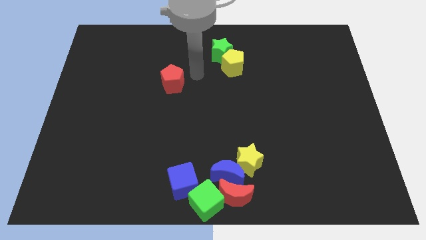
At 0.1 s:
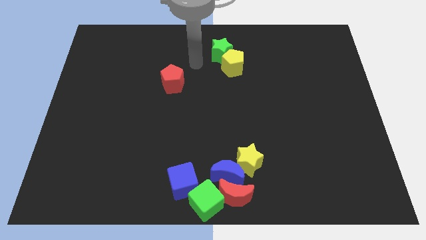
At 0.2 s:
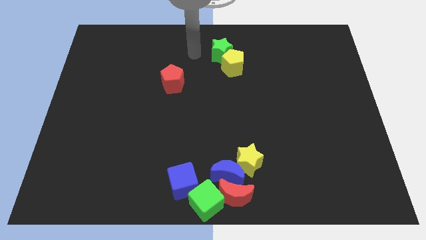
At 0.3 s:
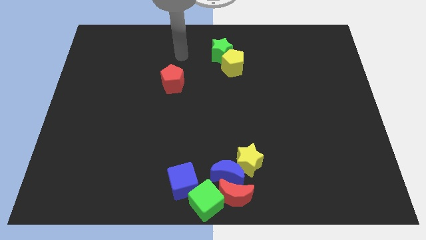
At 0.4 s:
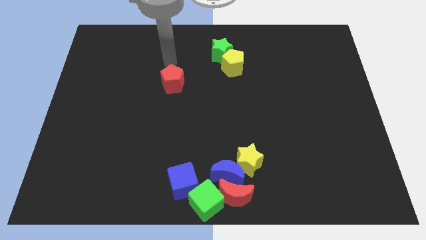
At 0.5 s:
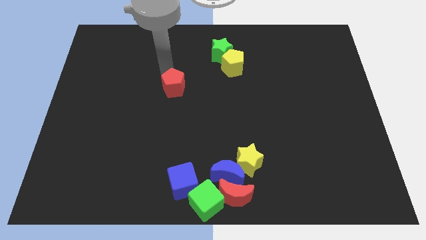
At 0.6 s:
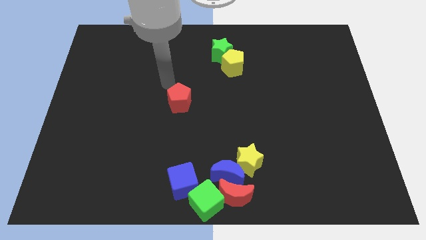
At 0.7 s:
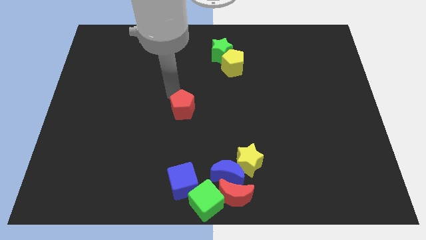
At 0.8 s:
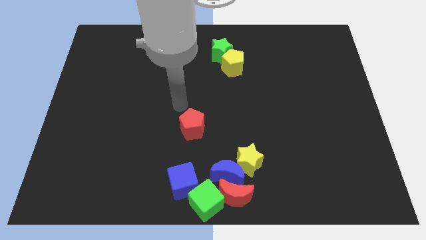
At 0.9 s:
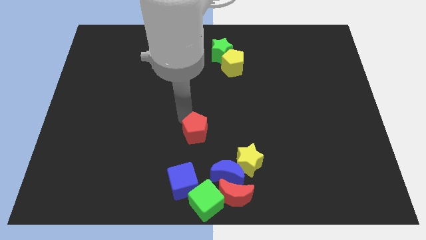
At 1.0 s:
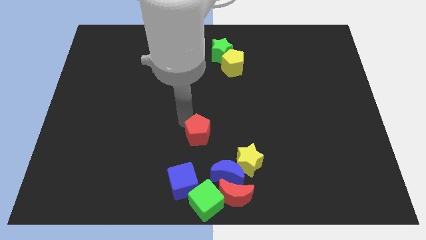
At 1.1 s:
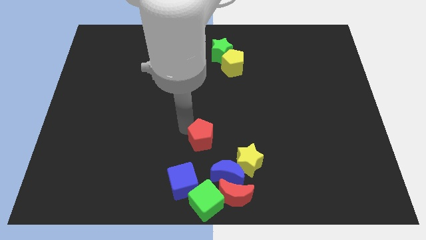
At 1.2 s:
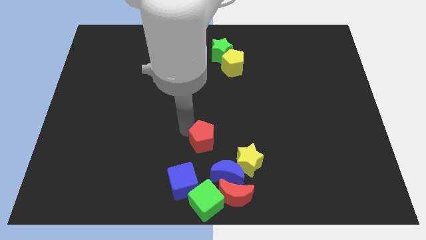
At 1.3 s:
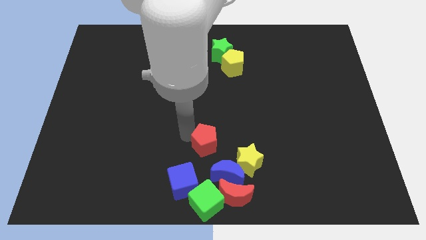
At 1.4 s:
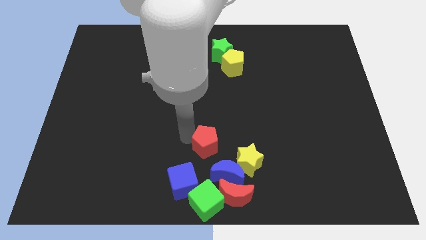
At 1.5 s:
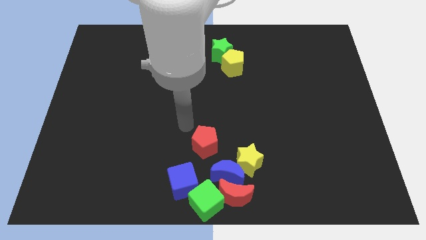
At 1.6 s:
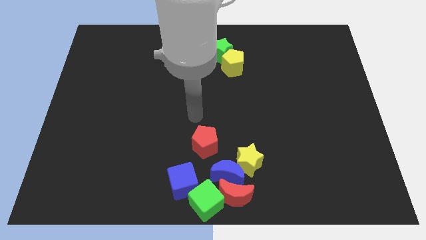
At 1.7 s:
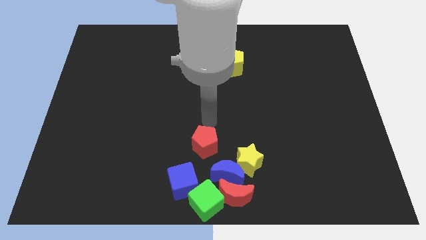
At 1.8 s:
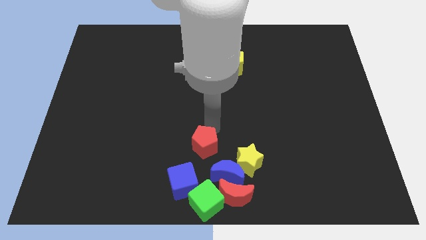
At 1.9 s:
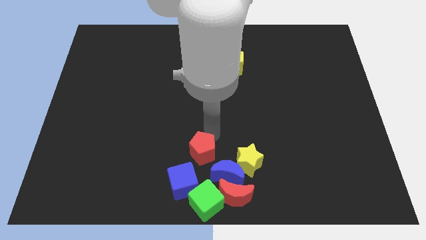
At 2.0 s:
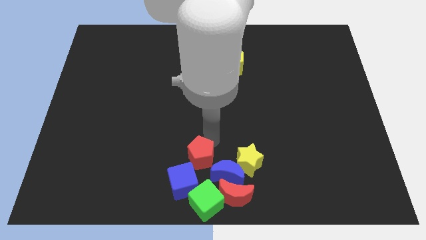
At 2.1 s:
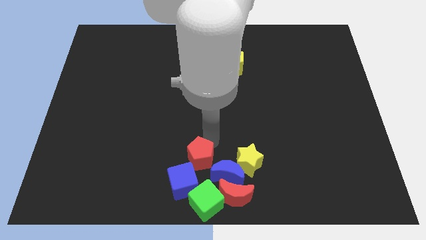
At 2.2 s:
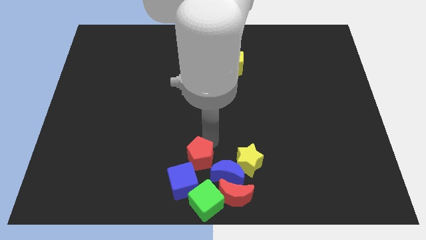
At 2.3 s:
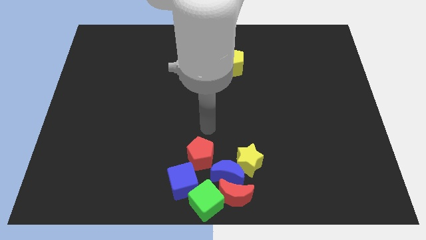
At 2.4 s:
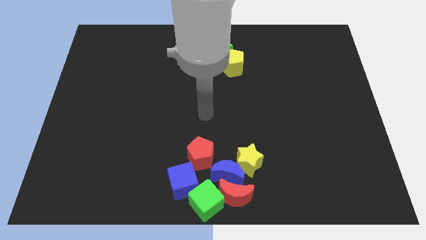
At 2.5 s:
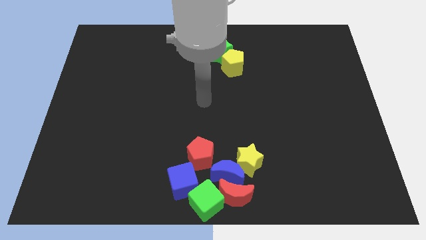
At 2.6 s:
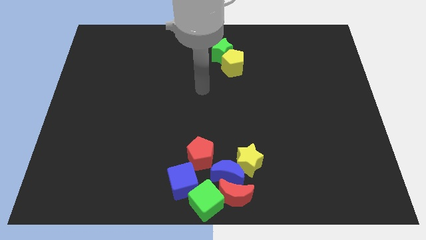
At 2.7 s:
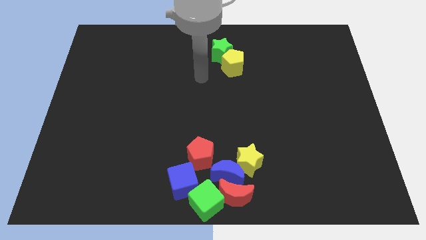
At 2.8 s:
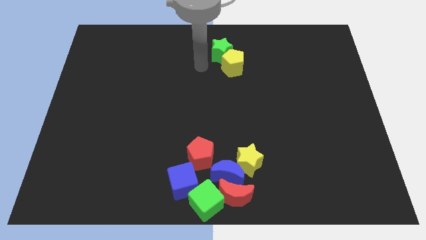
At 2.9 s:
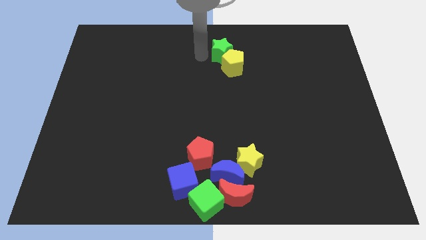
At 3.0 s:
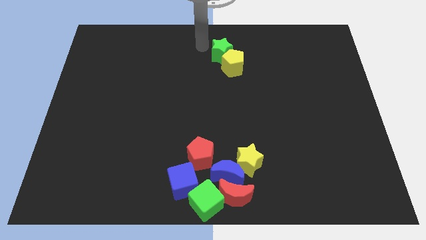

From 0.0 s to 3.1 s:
move the red pentagon at the top right side of blue cube

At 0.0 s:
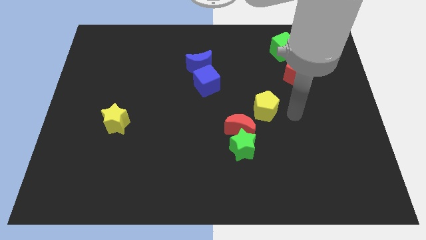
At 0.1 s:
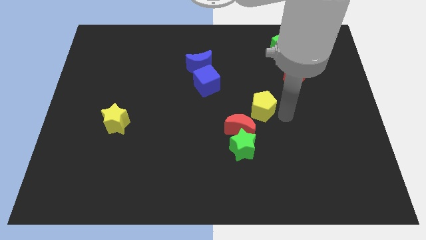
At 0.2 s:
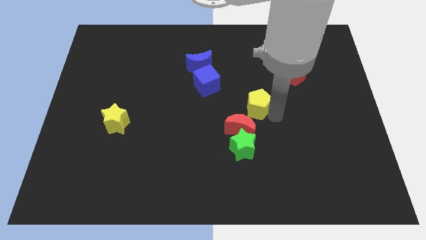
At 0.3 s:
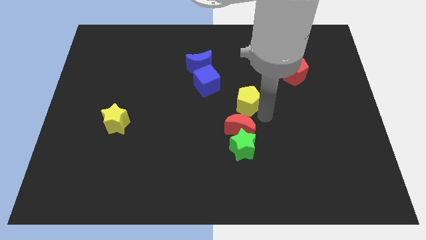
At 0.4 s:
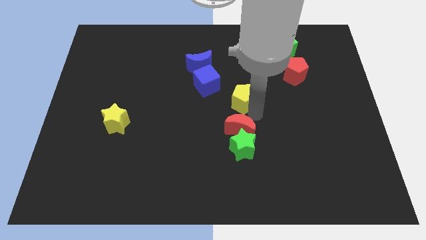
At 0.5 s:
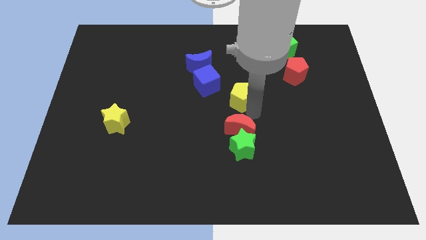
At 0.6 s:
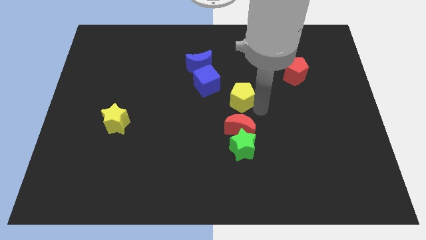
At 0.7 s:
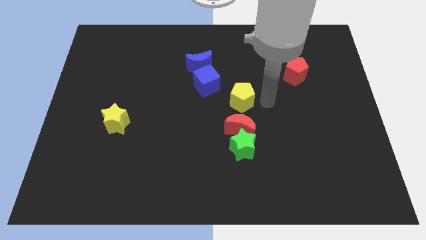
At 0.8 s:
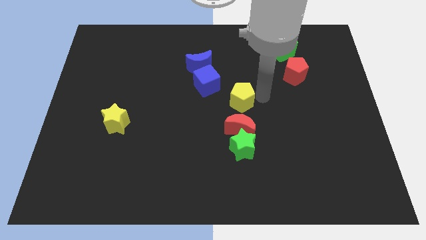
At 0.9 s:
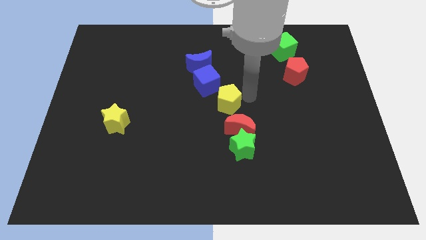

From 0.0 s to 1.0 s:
drag the yellow pentagon diagonally bottom right to blue cube

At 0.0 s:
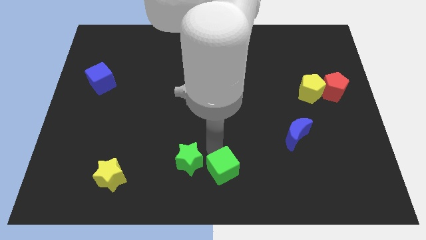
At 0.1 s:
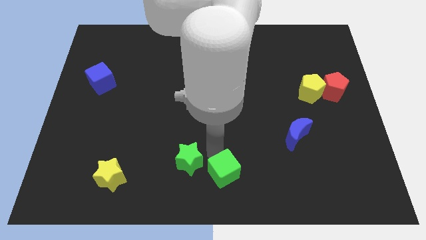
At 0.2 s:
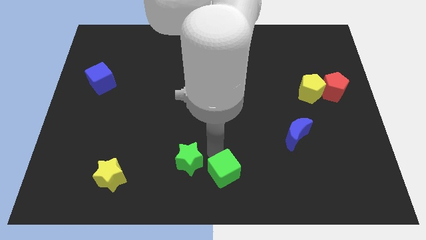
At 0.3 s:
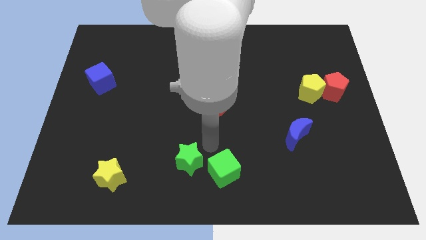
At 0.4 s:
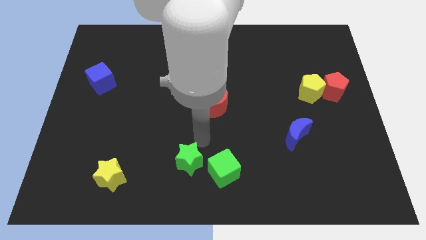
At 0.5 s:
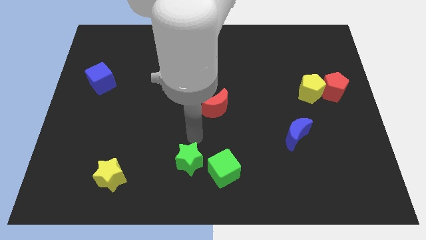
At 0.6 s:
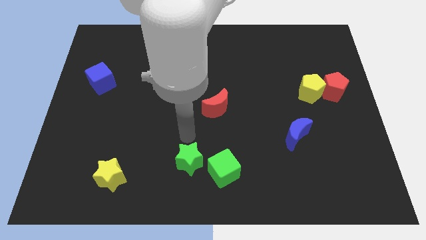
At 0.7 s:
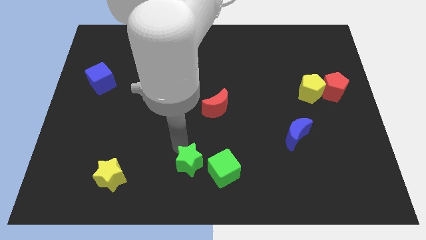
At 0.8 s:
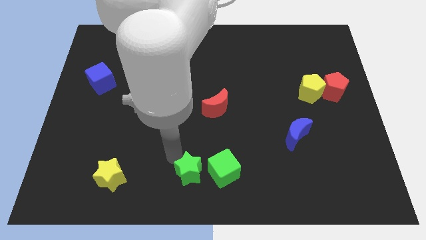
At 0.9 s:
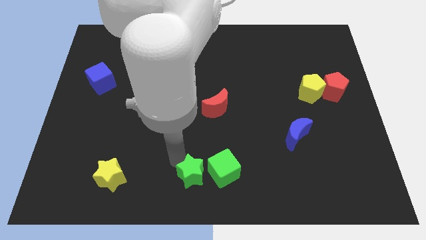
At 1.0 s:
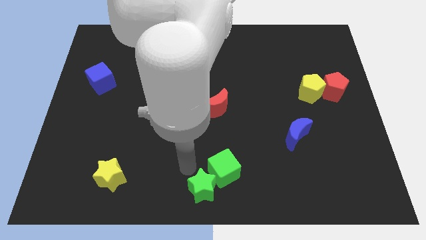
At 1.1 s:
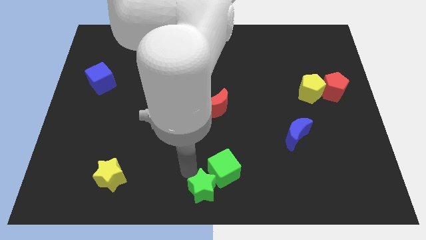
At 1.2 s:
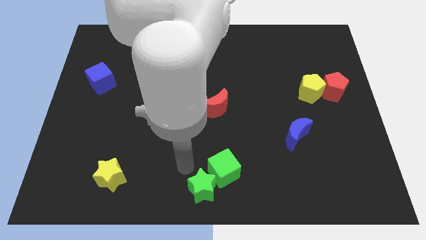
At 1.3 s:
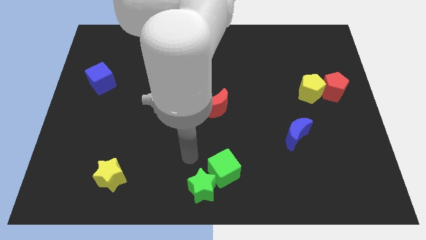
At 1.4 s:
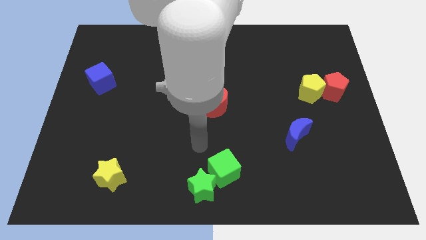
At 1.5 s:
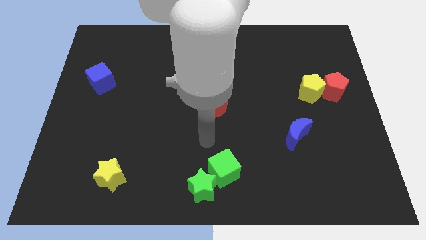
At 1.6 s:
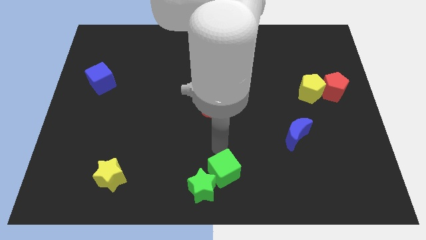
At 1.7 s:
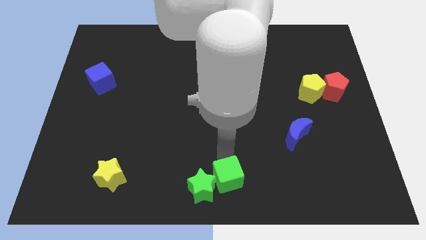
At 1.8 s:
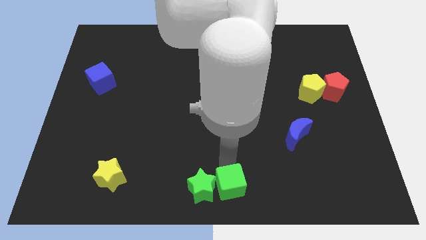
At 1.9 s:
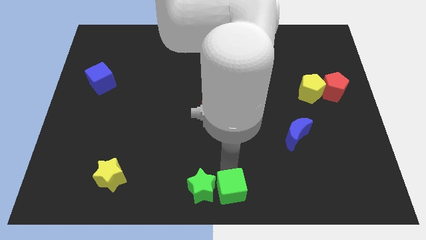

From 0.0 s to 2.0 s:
adjust the green blocks at the bottom center of the board

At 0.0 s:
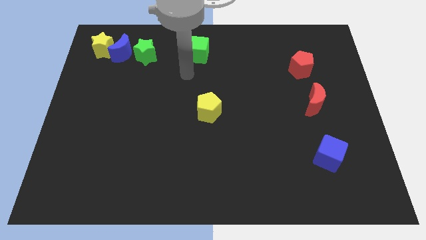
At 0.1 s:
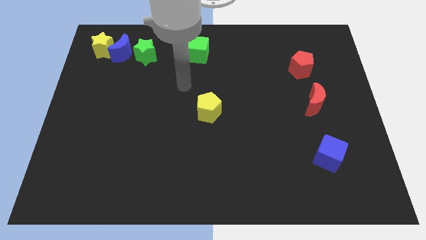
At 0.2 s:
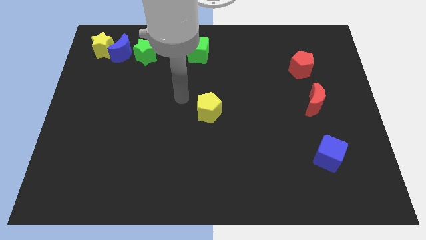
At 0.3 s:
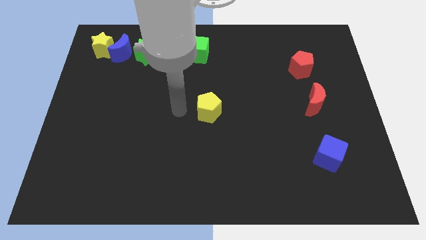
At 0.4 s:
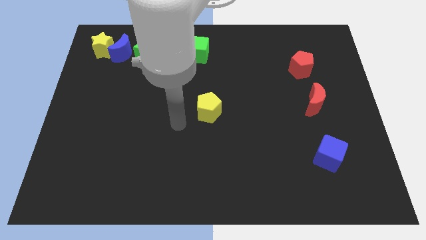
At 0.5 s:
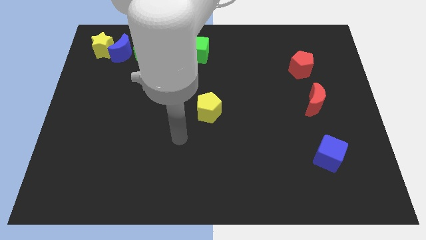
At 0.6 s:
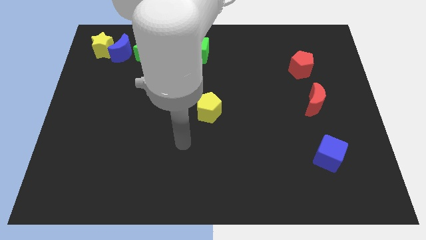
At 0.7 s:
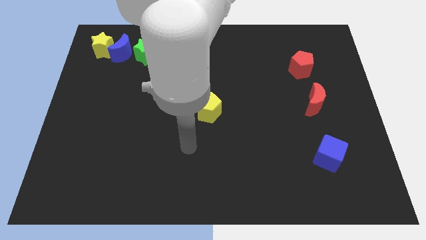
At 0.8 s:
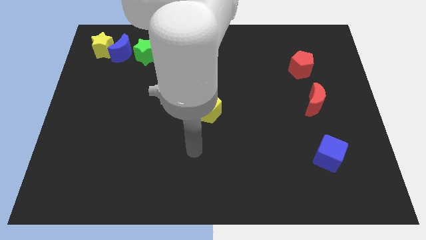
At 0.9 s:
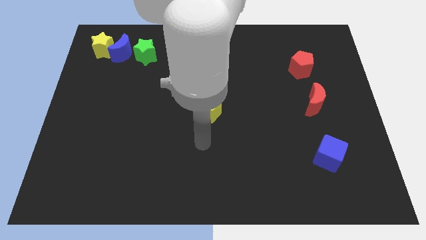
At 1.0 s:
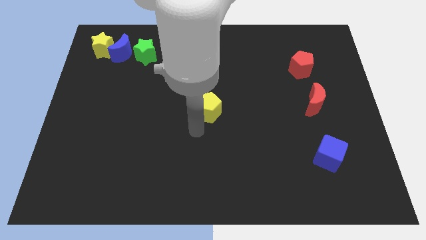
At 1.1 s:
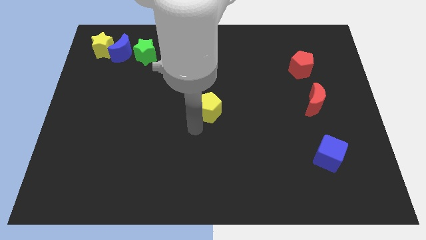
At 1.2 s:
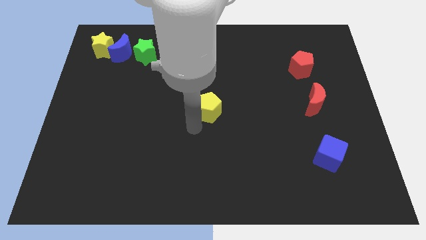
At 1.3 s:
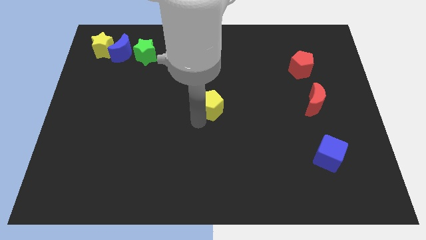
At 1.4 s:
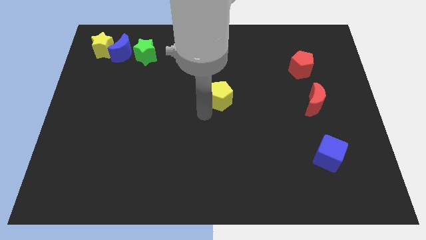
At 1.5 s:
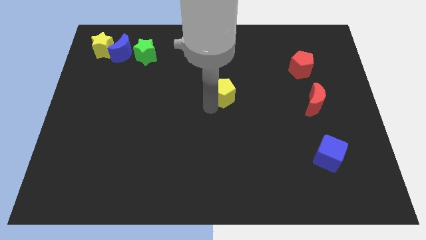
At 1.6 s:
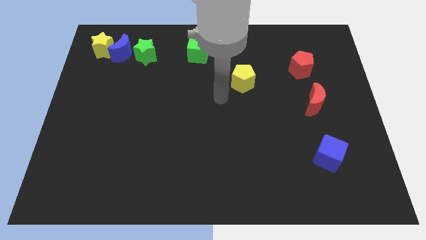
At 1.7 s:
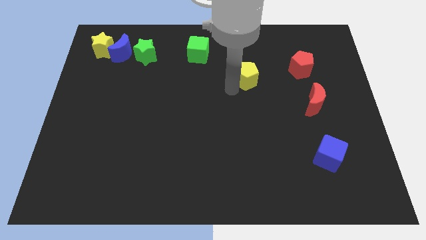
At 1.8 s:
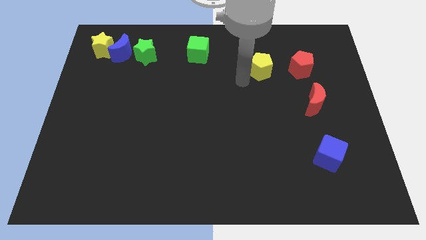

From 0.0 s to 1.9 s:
move the yellow pentagon to the left of the red pentagon

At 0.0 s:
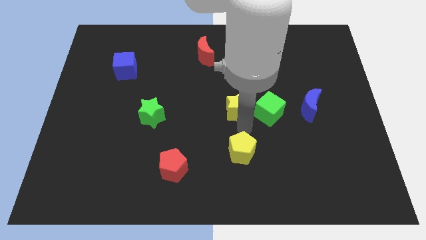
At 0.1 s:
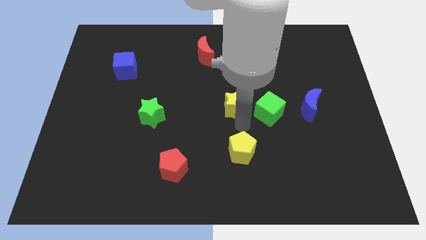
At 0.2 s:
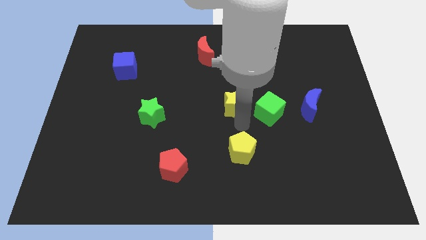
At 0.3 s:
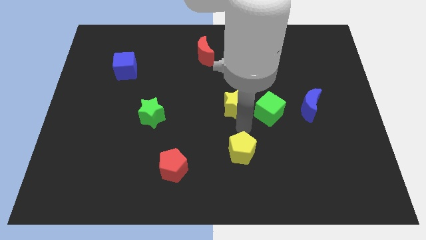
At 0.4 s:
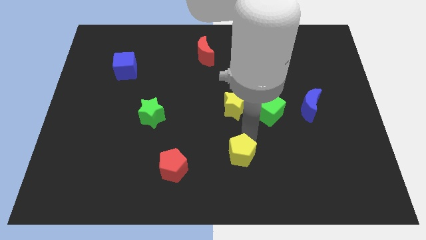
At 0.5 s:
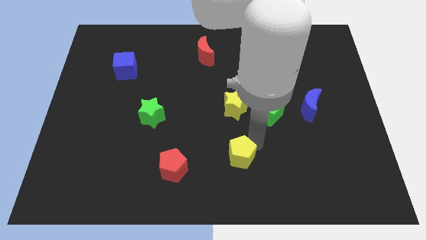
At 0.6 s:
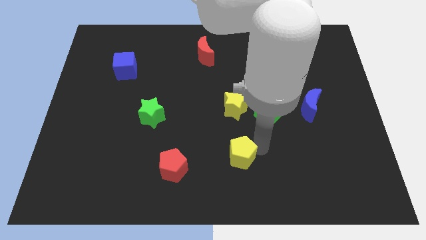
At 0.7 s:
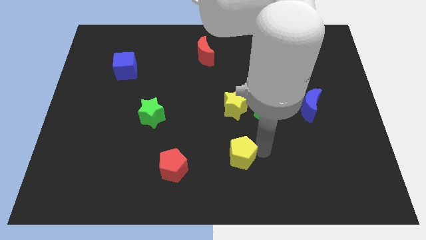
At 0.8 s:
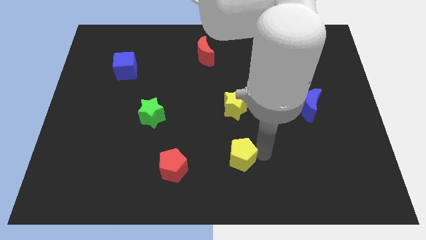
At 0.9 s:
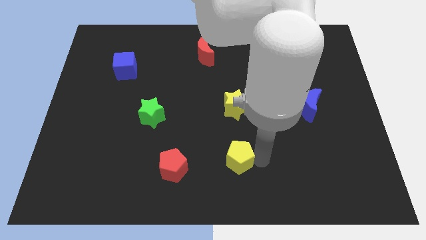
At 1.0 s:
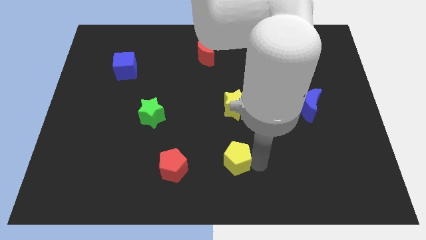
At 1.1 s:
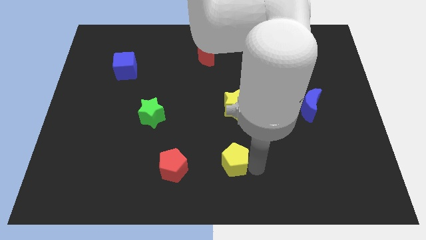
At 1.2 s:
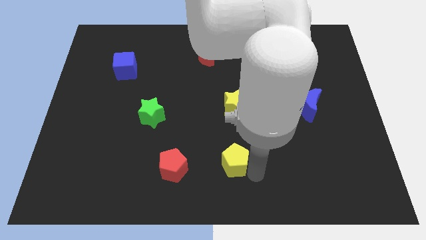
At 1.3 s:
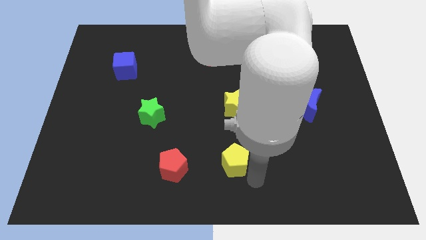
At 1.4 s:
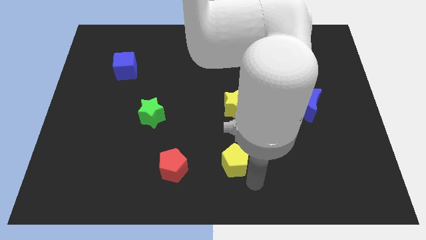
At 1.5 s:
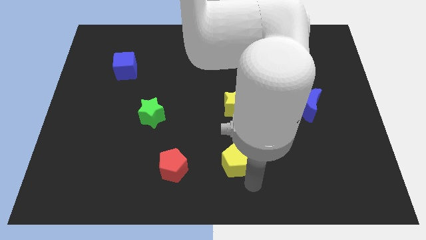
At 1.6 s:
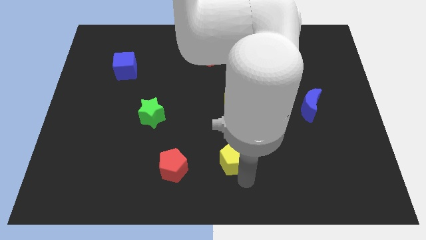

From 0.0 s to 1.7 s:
place the yellow pentagon to the right of the red pentagon
